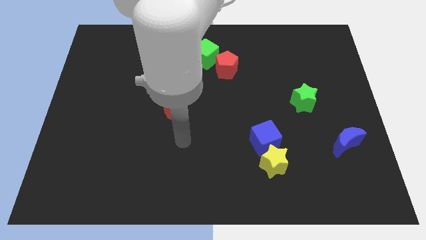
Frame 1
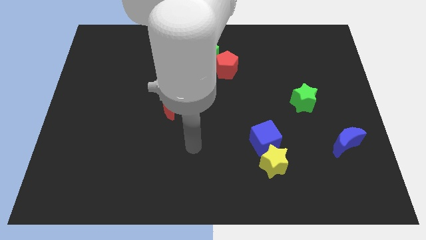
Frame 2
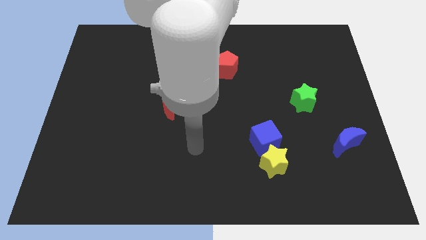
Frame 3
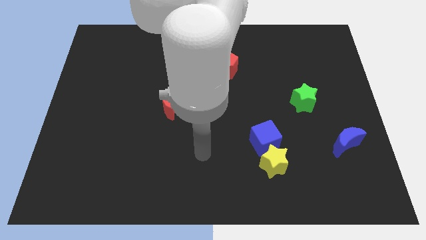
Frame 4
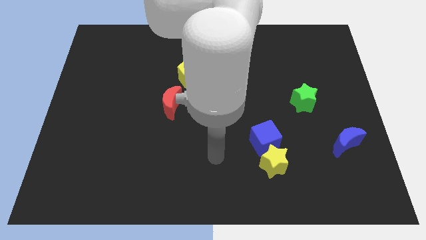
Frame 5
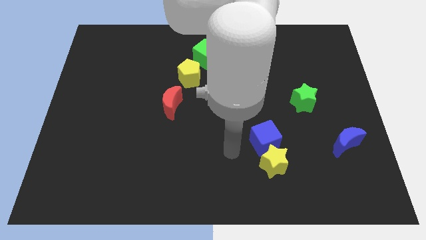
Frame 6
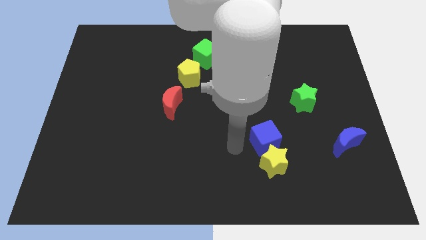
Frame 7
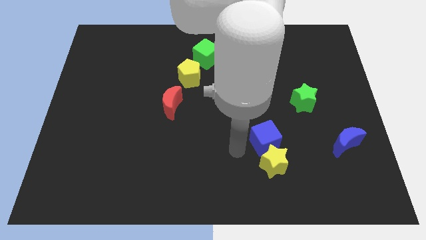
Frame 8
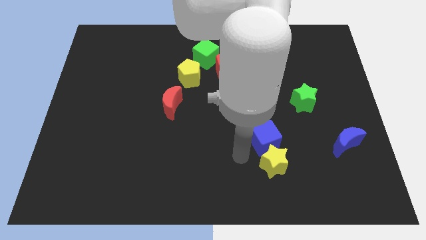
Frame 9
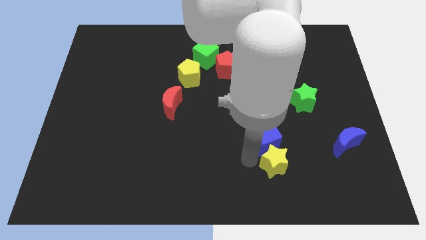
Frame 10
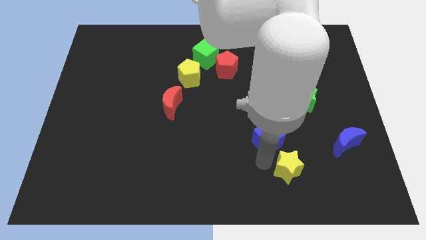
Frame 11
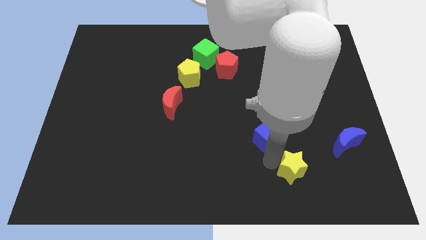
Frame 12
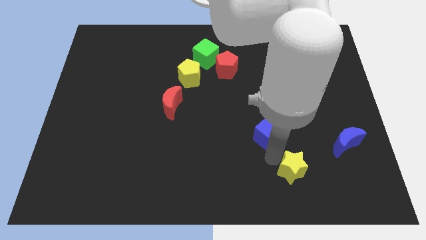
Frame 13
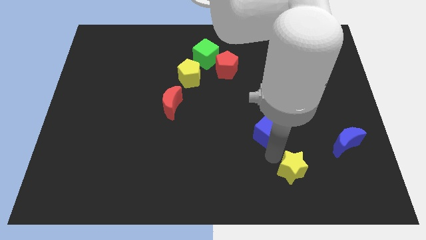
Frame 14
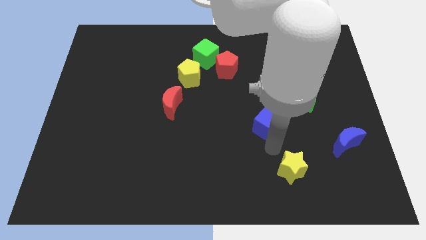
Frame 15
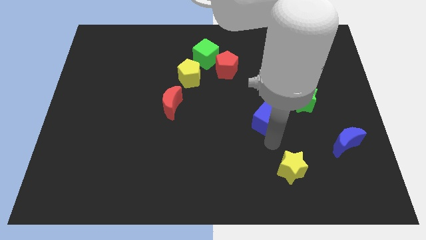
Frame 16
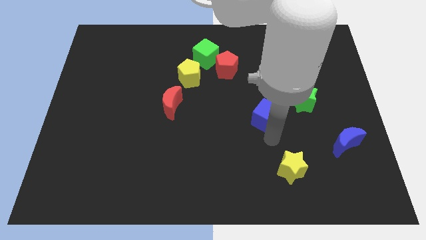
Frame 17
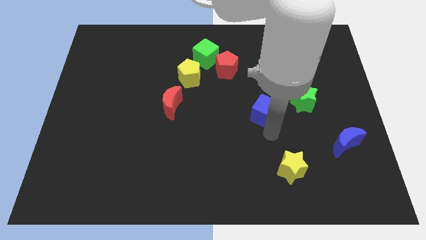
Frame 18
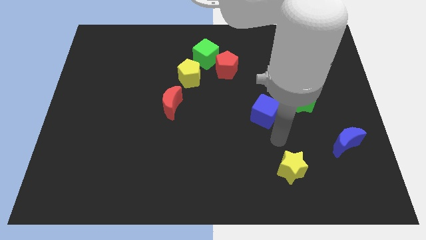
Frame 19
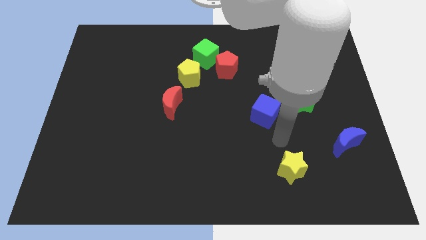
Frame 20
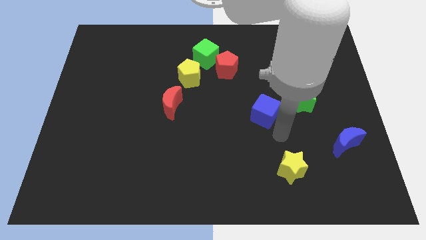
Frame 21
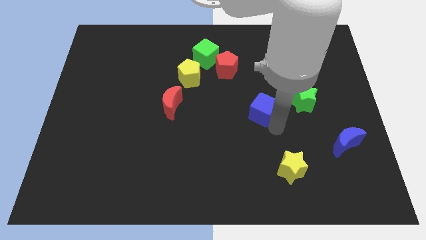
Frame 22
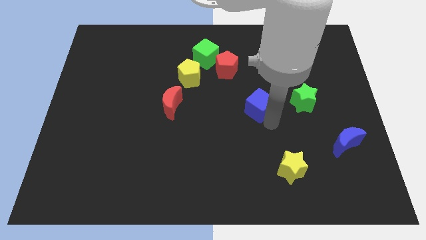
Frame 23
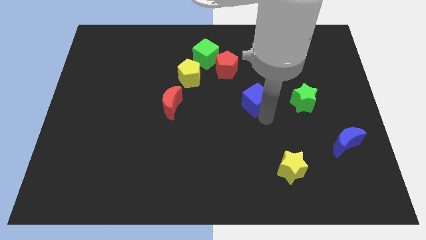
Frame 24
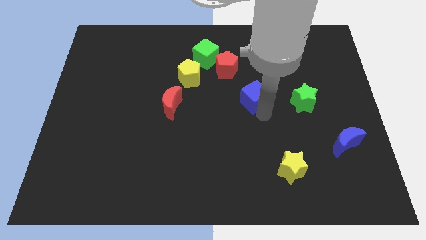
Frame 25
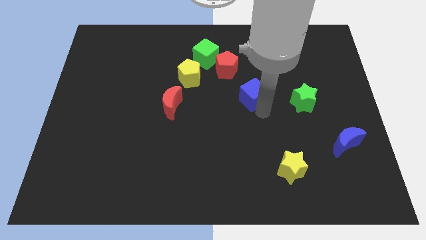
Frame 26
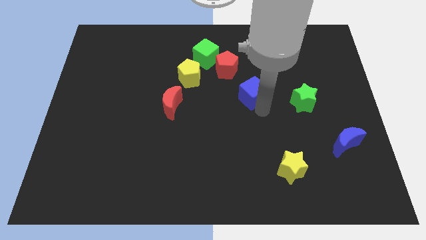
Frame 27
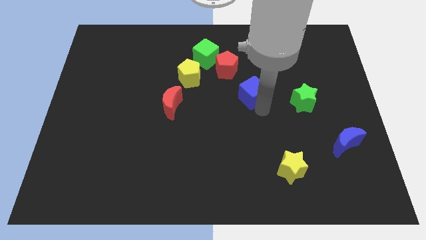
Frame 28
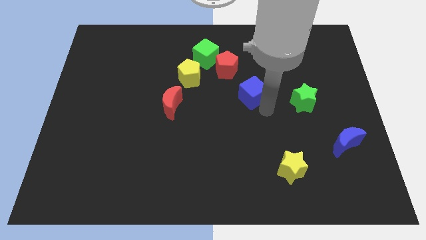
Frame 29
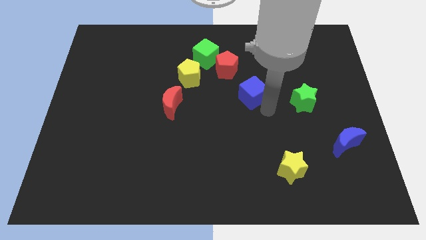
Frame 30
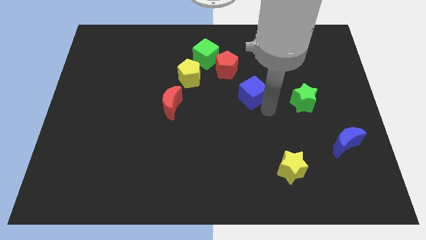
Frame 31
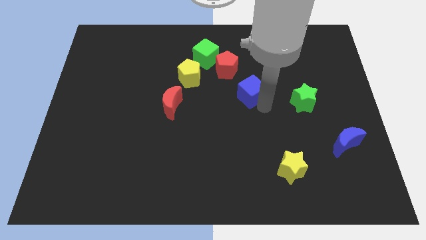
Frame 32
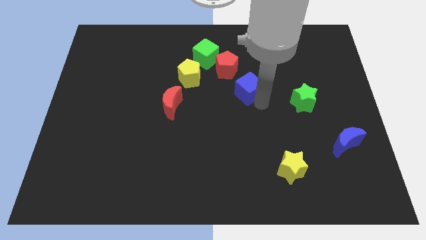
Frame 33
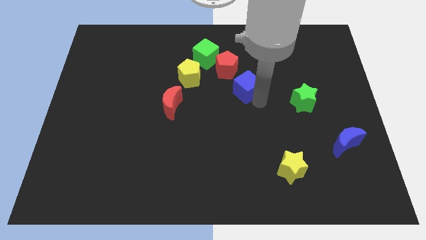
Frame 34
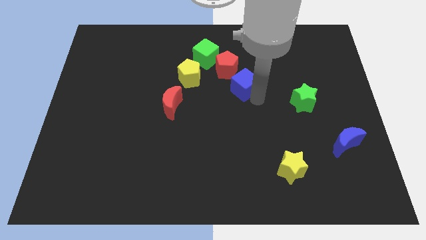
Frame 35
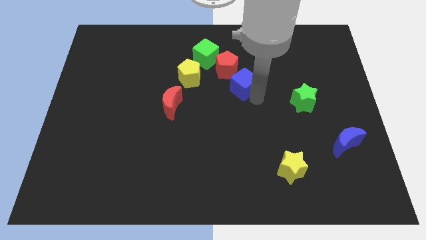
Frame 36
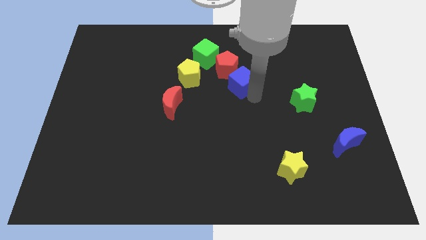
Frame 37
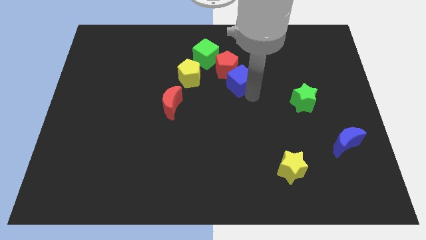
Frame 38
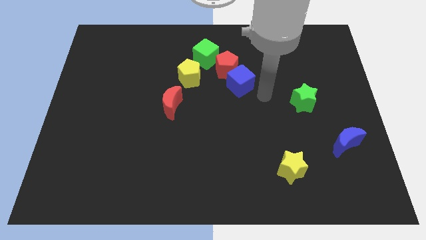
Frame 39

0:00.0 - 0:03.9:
push the blue cube to the bottom right side of the red pentagon

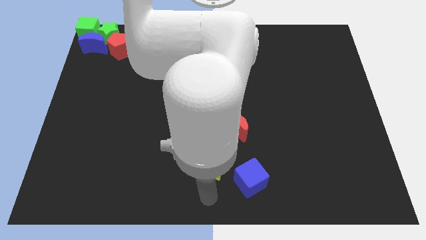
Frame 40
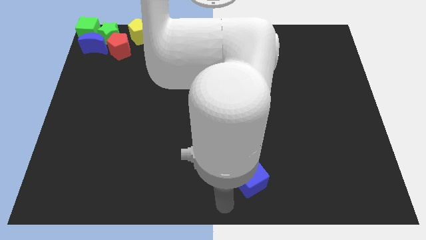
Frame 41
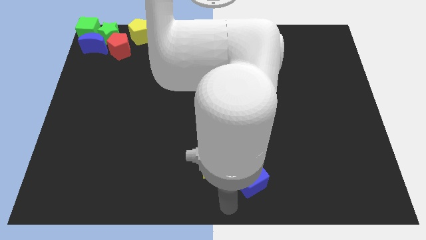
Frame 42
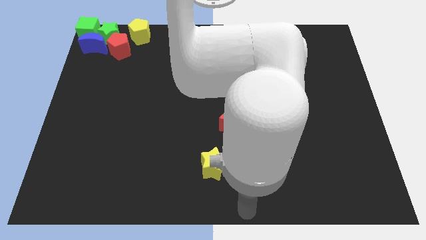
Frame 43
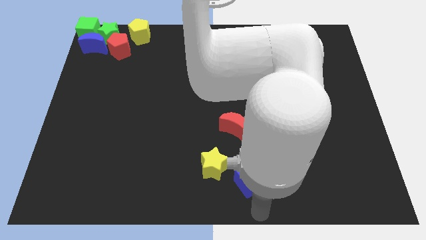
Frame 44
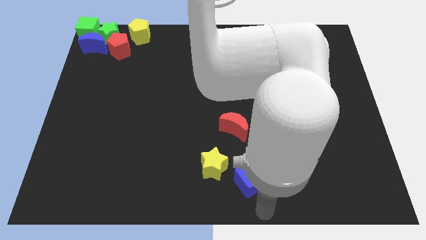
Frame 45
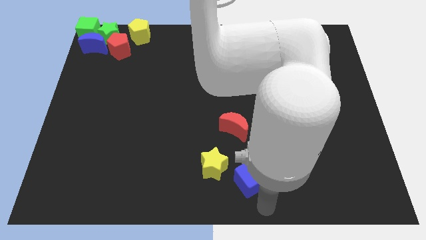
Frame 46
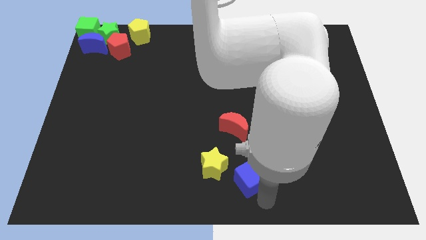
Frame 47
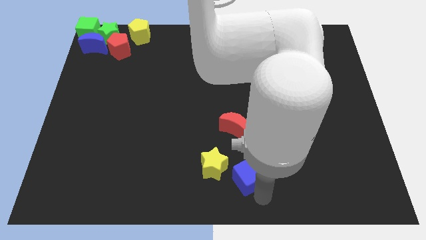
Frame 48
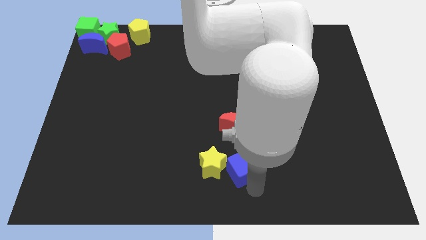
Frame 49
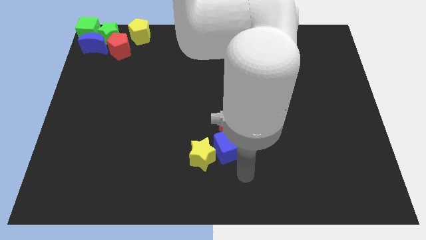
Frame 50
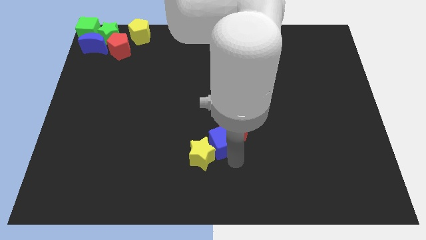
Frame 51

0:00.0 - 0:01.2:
push the blue cube in between yellow star and red crescent

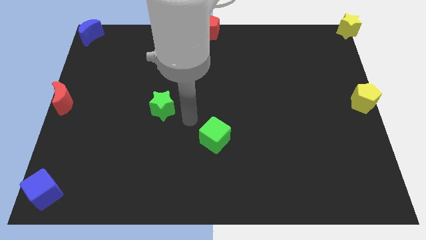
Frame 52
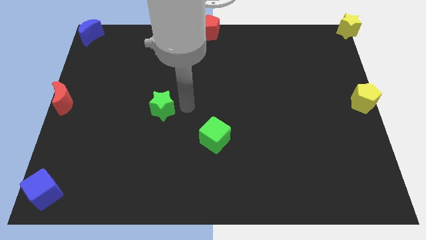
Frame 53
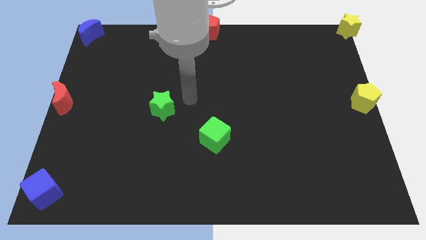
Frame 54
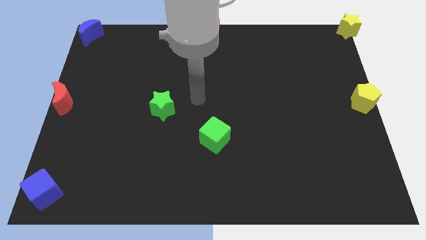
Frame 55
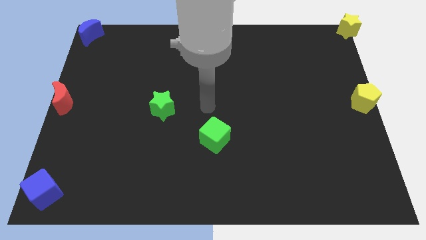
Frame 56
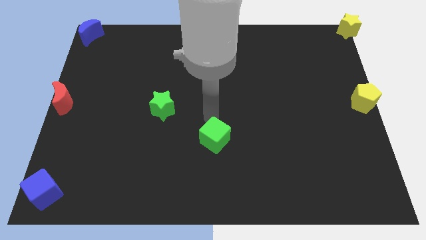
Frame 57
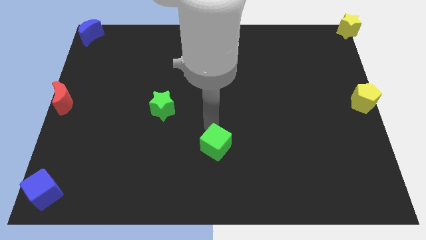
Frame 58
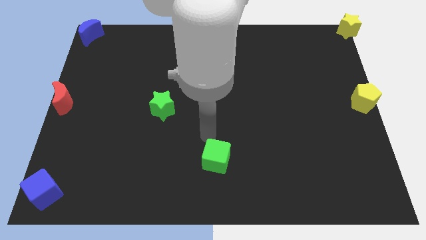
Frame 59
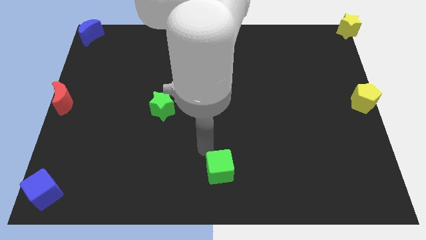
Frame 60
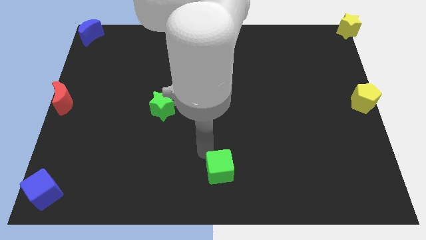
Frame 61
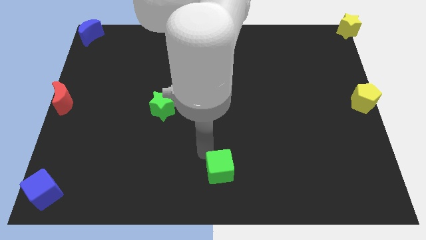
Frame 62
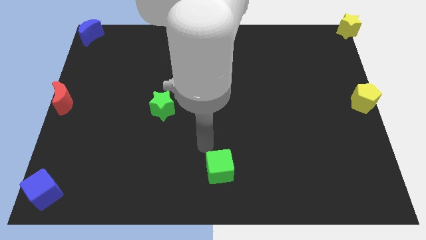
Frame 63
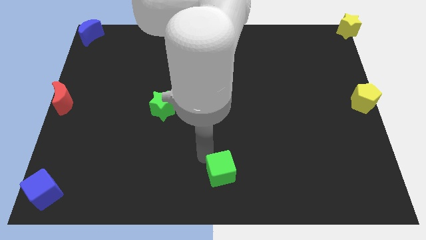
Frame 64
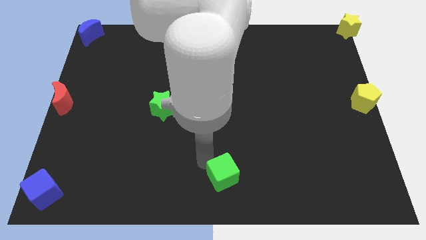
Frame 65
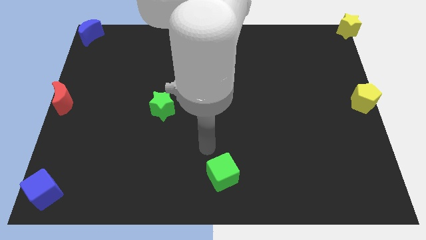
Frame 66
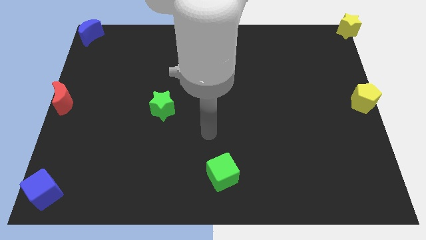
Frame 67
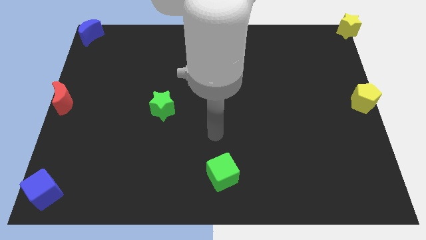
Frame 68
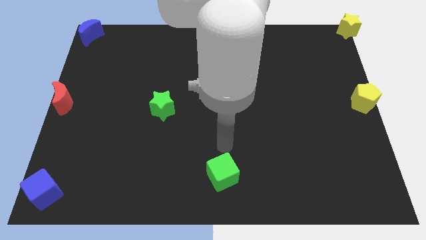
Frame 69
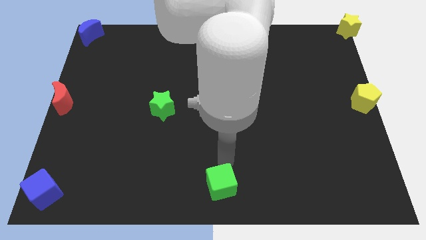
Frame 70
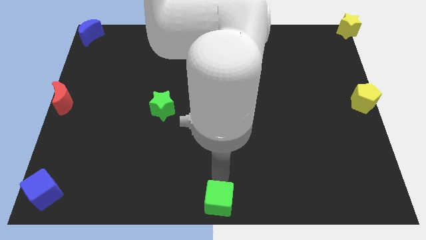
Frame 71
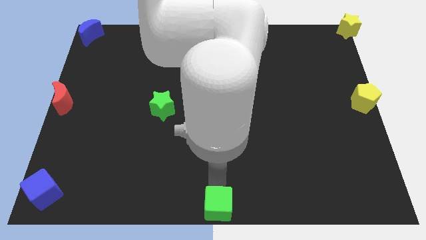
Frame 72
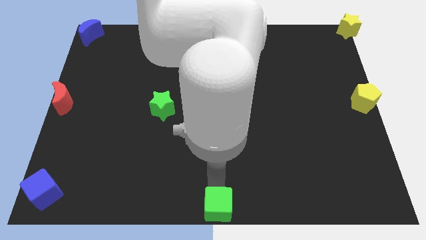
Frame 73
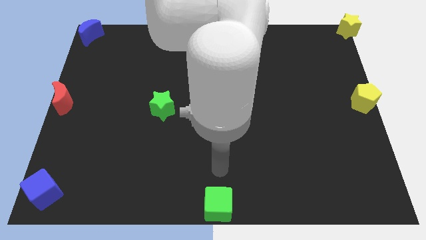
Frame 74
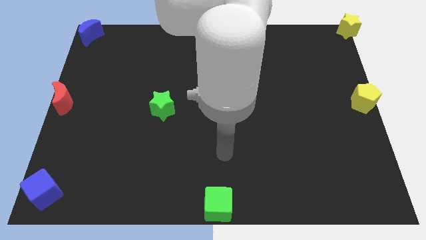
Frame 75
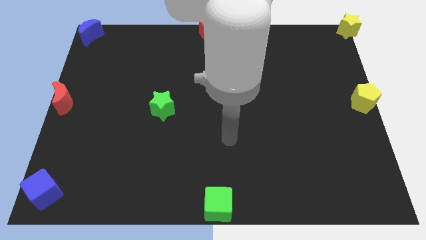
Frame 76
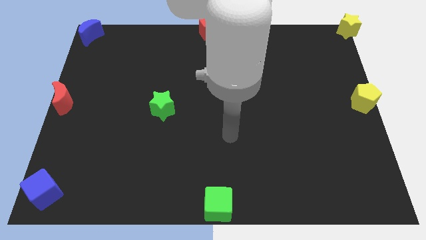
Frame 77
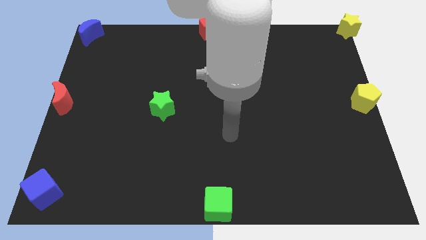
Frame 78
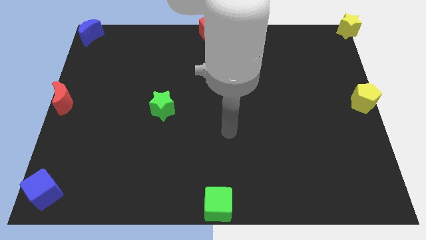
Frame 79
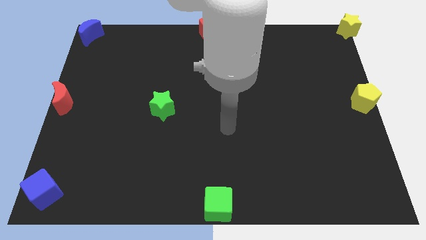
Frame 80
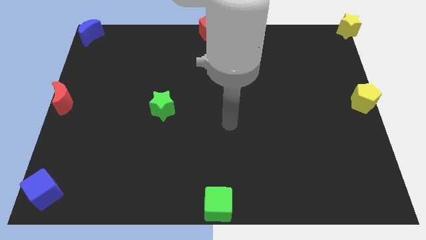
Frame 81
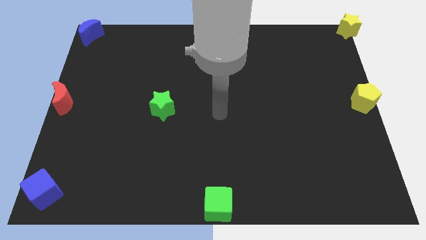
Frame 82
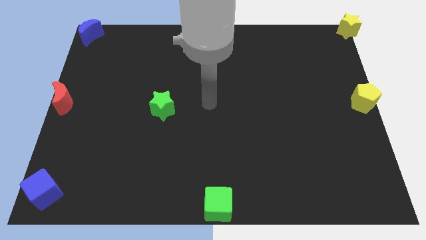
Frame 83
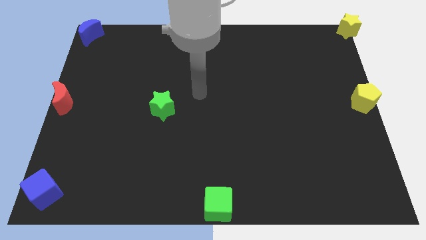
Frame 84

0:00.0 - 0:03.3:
move the green cube to the bottom center

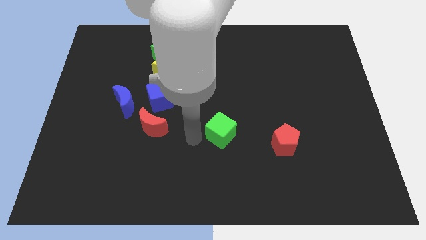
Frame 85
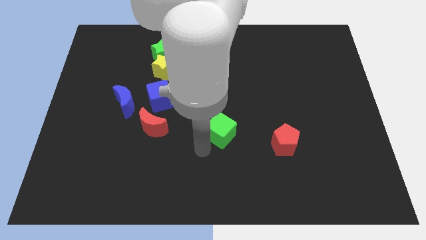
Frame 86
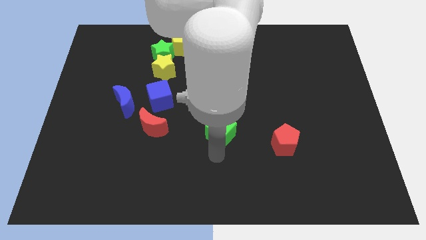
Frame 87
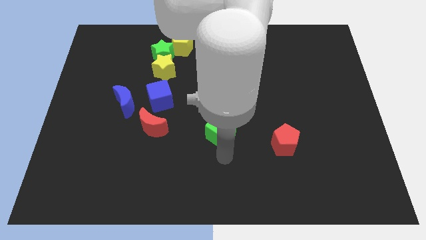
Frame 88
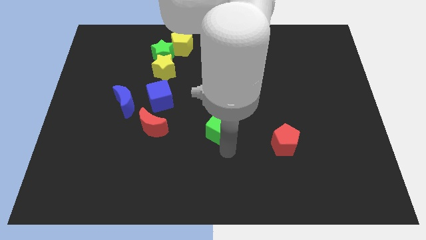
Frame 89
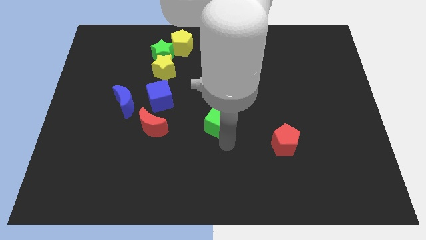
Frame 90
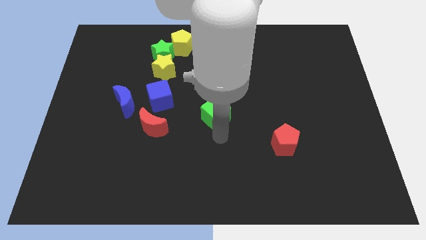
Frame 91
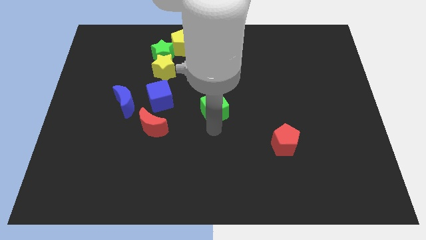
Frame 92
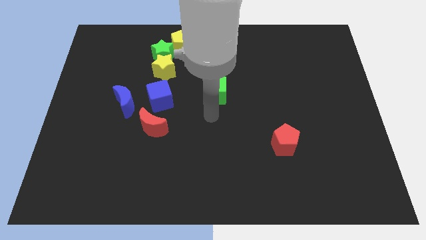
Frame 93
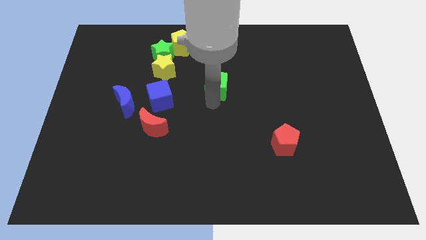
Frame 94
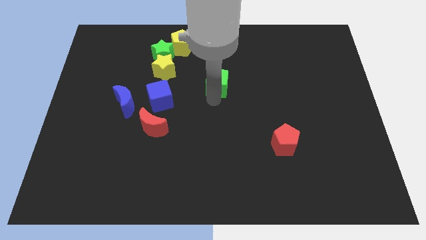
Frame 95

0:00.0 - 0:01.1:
move the green cube up slightly
